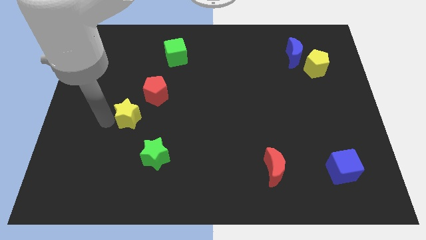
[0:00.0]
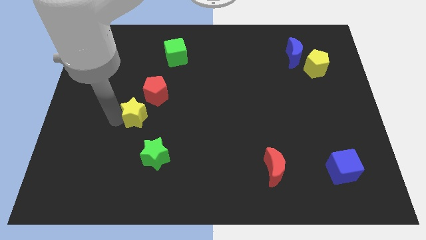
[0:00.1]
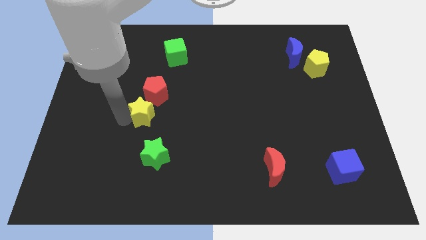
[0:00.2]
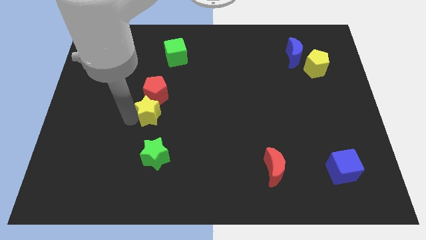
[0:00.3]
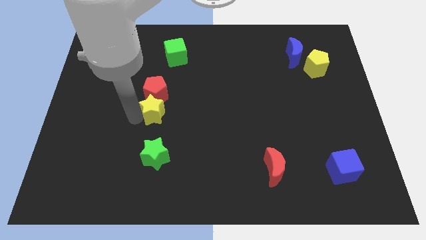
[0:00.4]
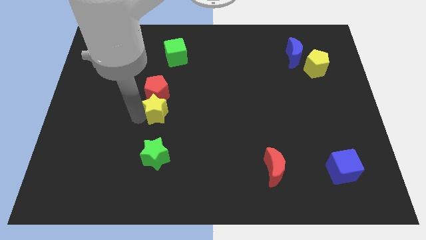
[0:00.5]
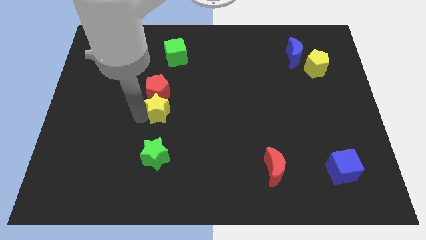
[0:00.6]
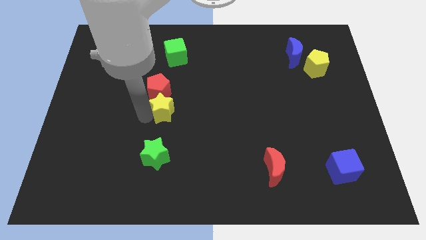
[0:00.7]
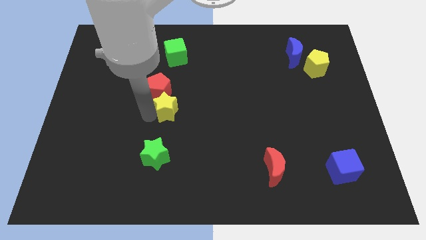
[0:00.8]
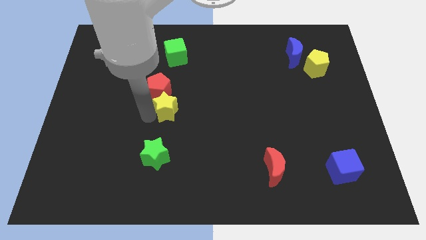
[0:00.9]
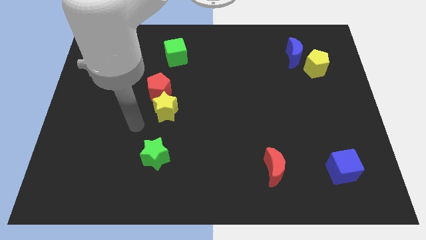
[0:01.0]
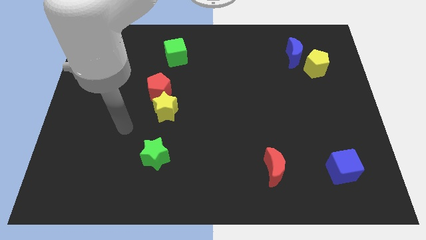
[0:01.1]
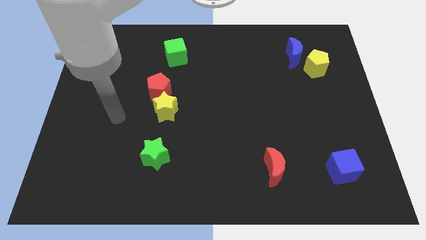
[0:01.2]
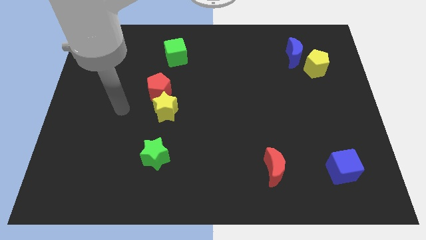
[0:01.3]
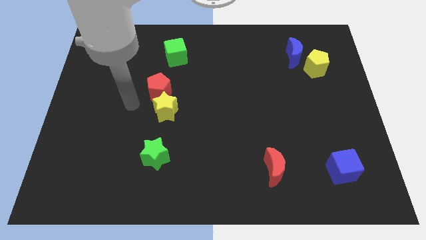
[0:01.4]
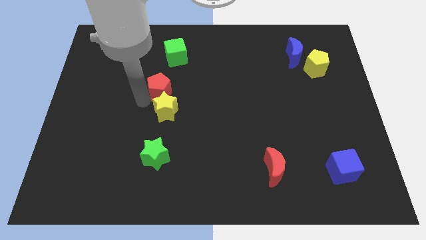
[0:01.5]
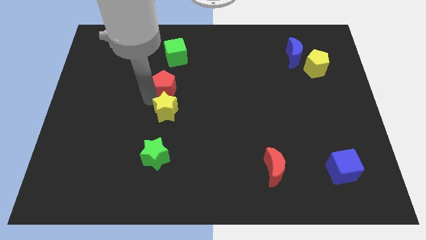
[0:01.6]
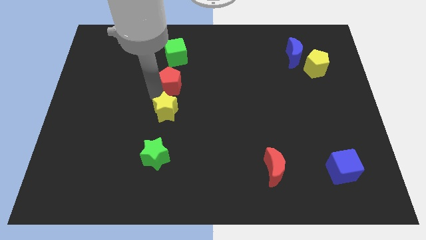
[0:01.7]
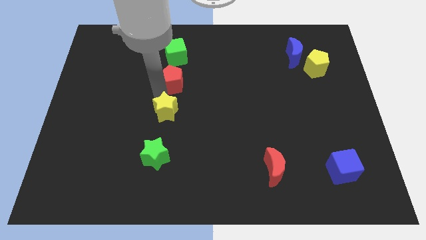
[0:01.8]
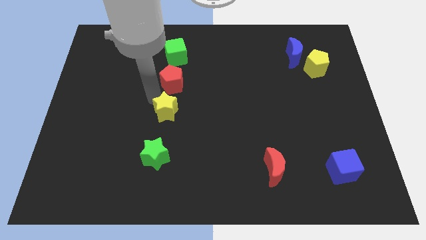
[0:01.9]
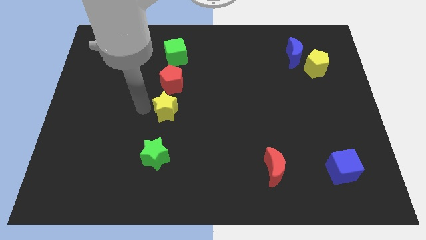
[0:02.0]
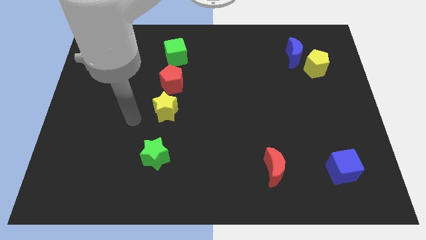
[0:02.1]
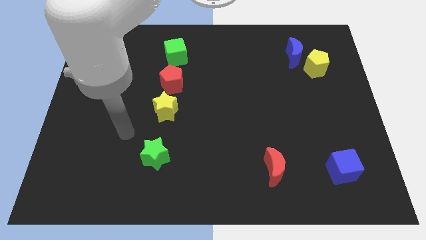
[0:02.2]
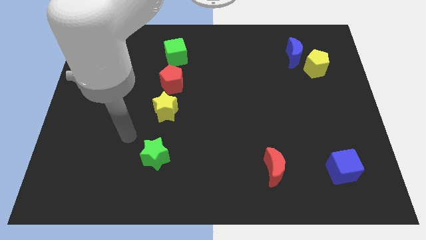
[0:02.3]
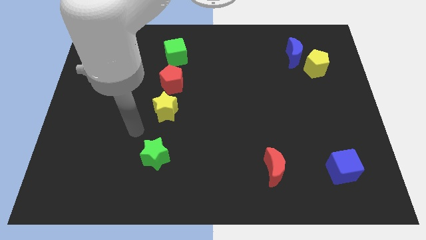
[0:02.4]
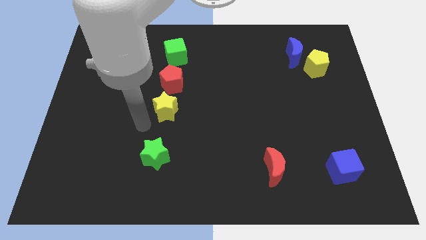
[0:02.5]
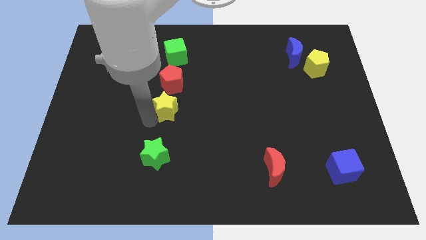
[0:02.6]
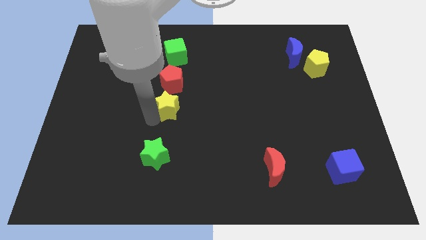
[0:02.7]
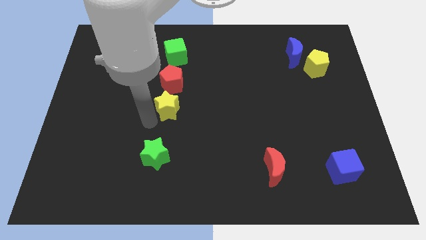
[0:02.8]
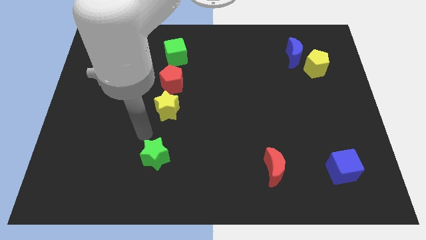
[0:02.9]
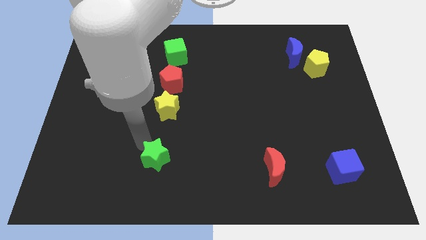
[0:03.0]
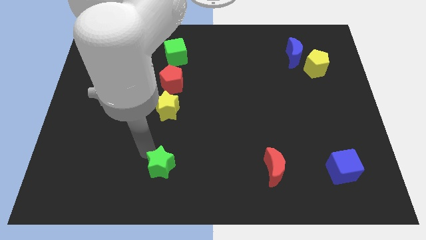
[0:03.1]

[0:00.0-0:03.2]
put the red pentagon and yellow star in a line vertically below the green cube

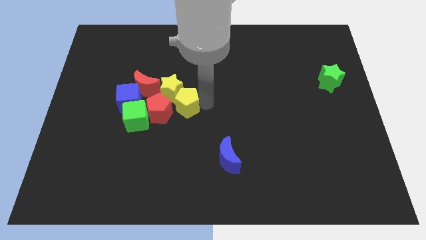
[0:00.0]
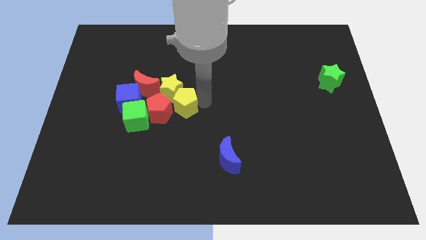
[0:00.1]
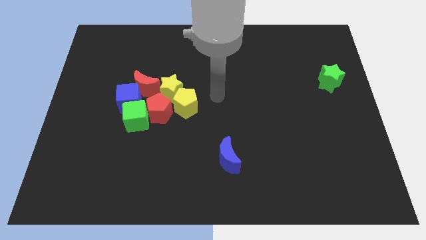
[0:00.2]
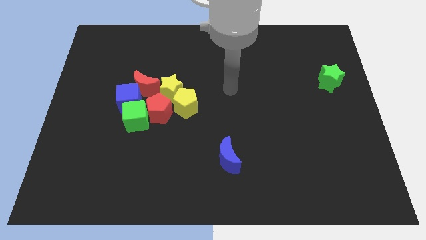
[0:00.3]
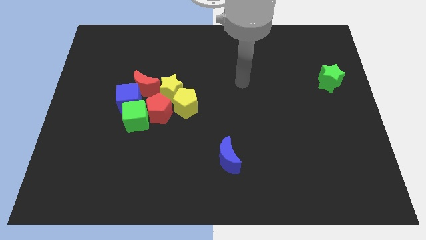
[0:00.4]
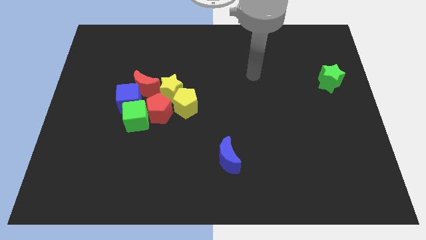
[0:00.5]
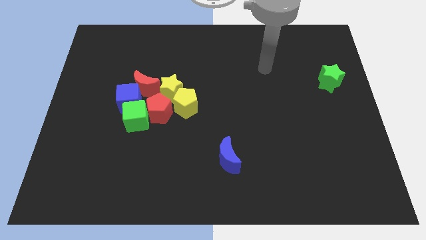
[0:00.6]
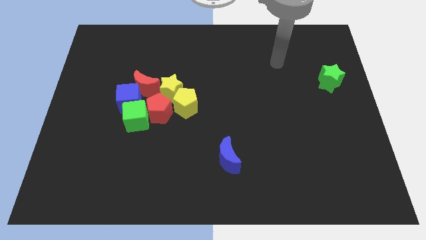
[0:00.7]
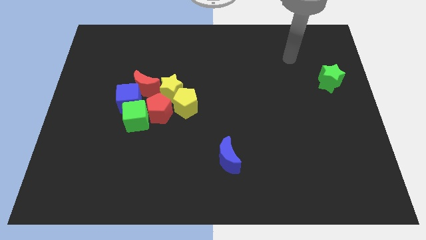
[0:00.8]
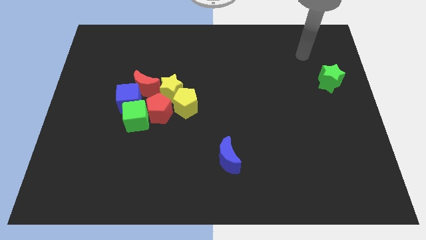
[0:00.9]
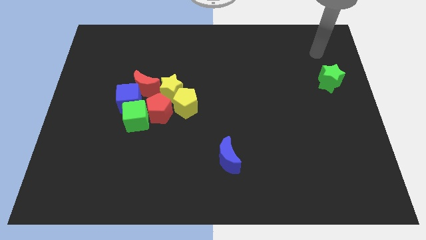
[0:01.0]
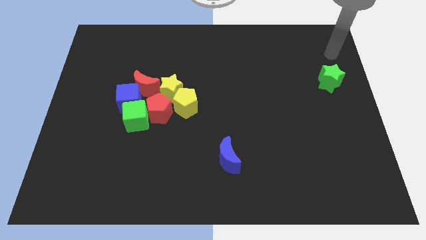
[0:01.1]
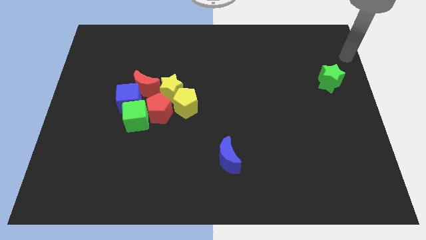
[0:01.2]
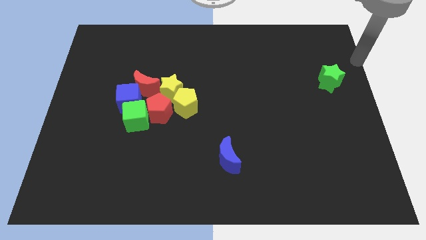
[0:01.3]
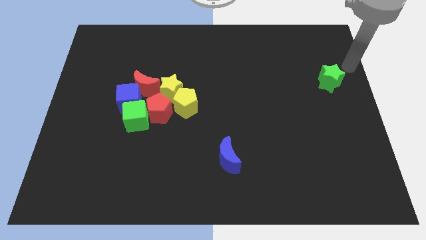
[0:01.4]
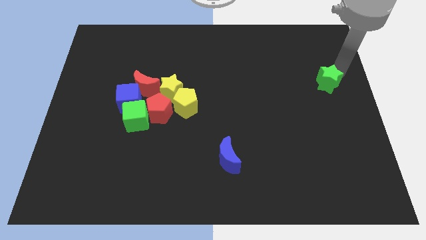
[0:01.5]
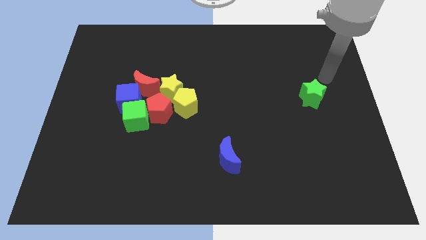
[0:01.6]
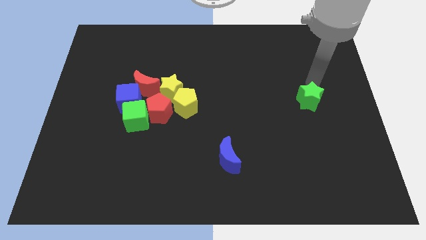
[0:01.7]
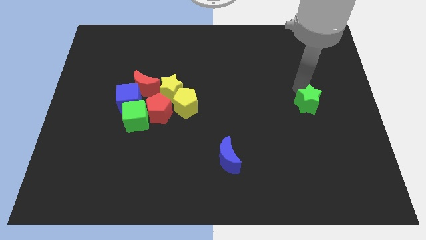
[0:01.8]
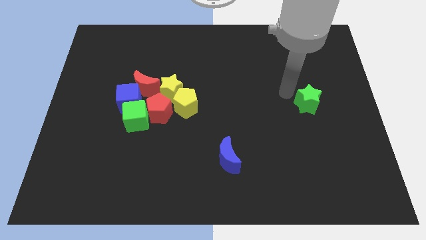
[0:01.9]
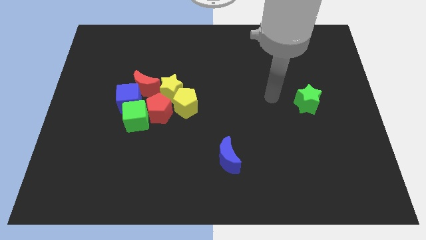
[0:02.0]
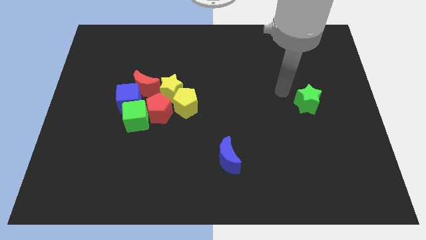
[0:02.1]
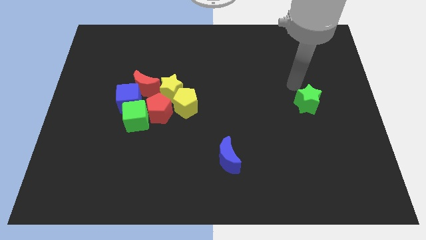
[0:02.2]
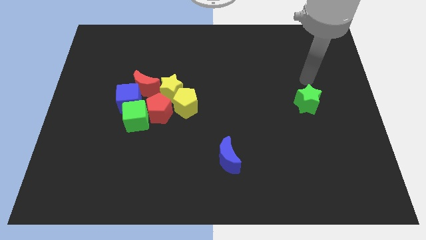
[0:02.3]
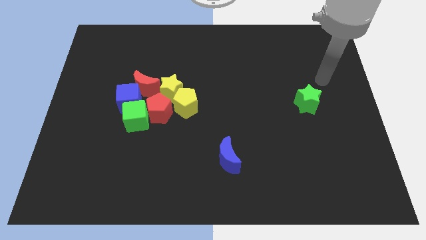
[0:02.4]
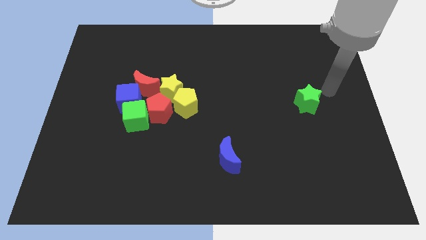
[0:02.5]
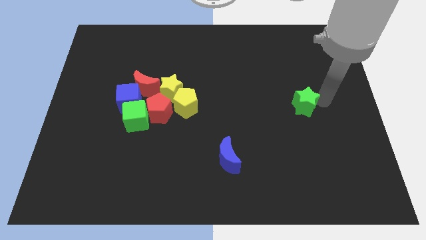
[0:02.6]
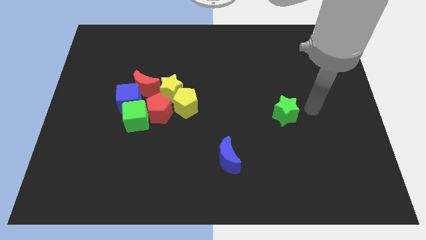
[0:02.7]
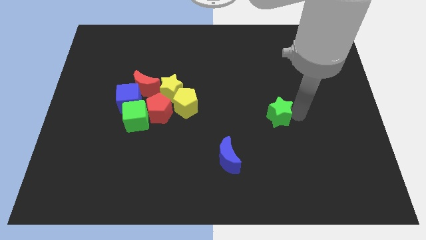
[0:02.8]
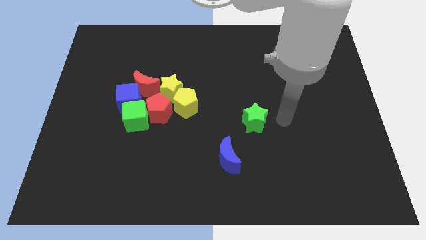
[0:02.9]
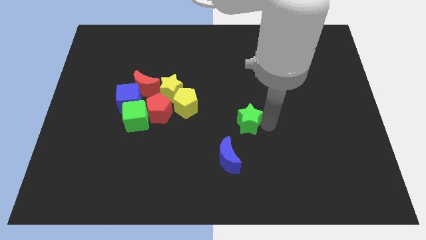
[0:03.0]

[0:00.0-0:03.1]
push the green star at the top right of the blue crescent

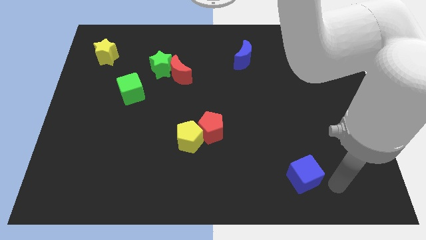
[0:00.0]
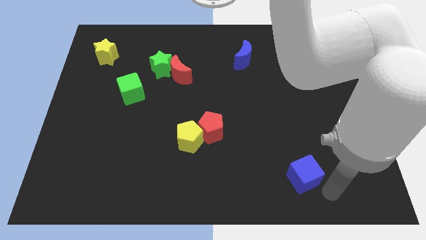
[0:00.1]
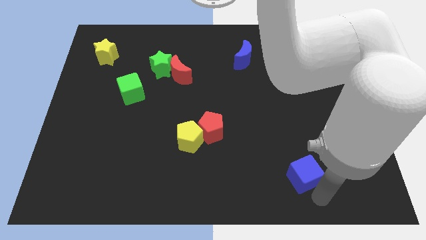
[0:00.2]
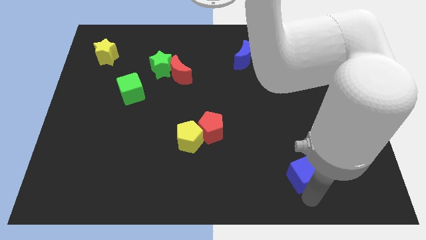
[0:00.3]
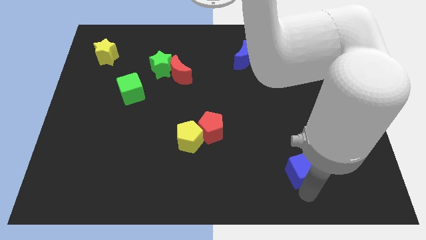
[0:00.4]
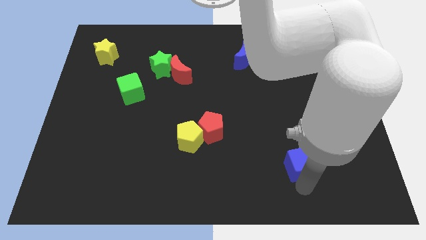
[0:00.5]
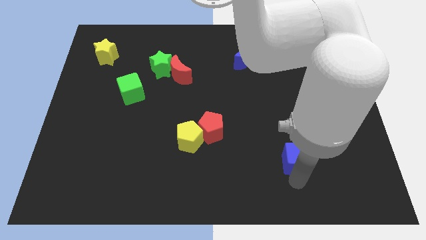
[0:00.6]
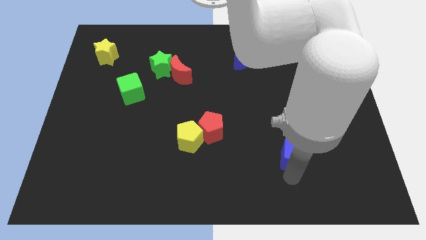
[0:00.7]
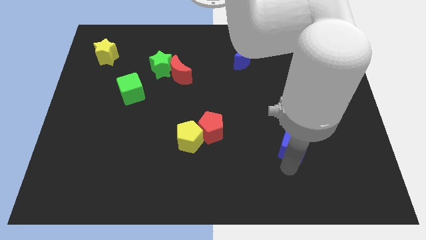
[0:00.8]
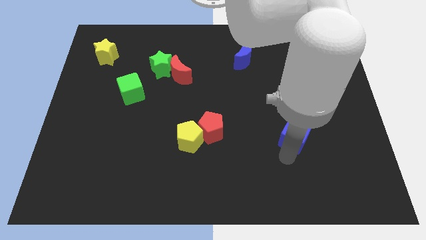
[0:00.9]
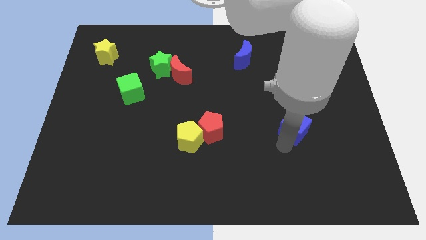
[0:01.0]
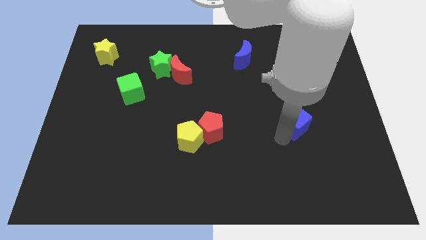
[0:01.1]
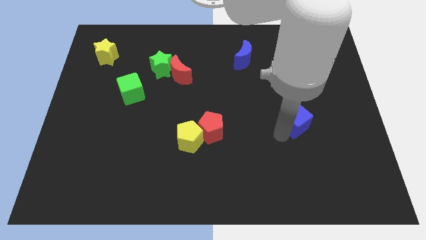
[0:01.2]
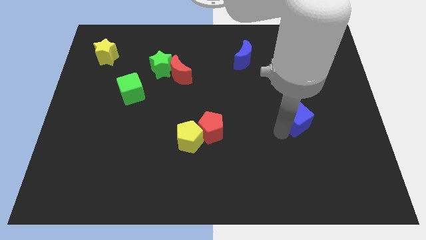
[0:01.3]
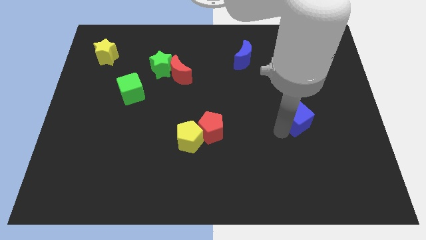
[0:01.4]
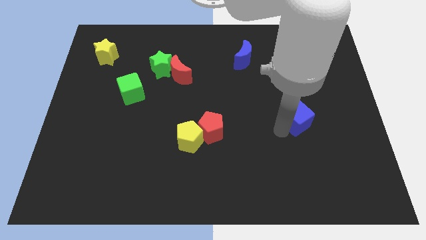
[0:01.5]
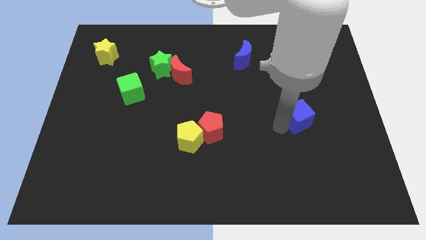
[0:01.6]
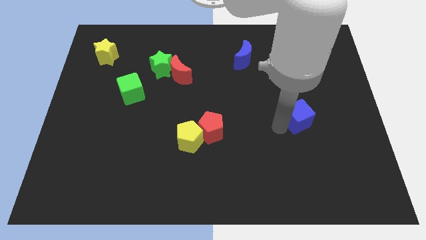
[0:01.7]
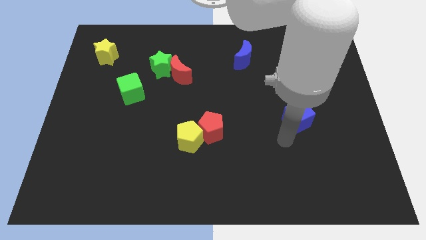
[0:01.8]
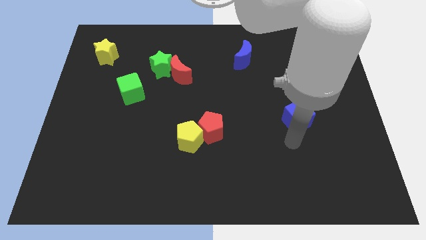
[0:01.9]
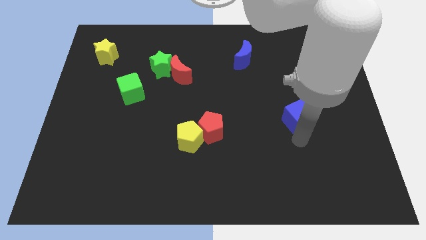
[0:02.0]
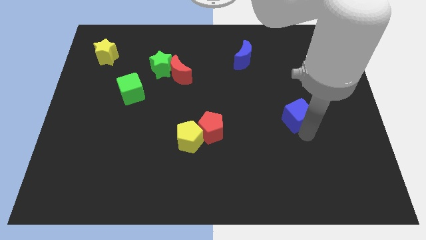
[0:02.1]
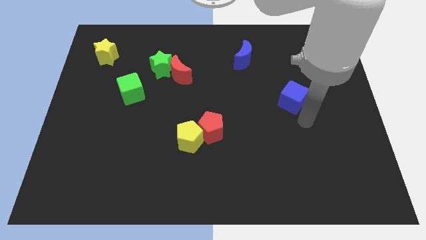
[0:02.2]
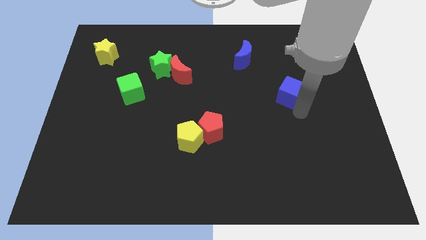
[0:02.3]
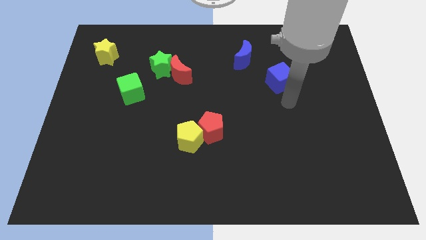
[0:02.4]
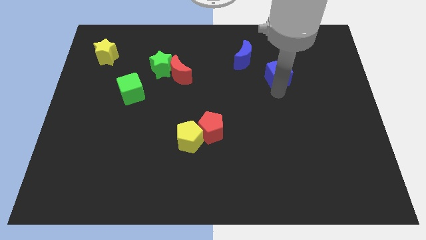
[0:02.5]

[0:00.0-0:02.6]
place the blue cube below the blue moon

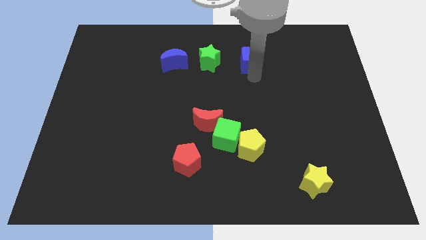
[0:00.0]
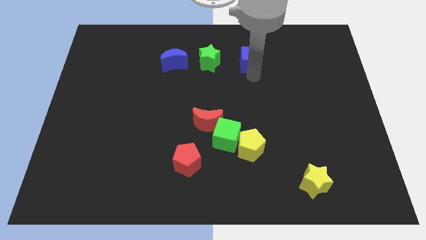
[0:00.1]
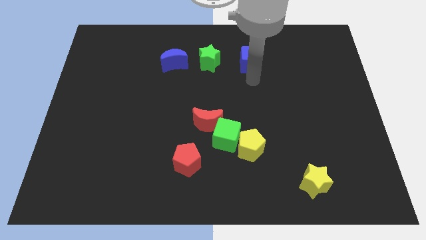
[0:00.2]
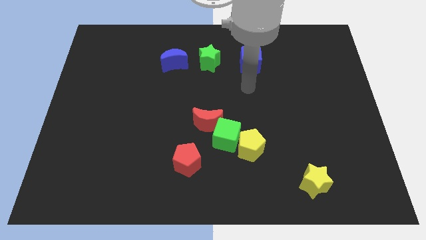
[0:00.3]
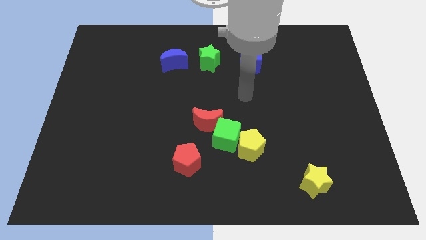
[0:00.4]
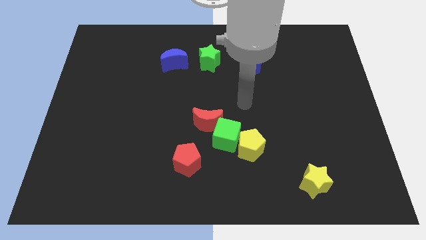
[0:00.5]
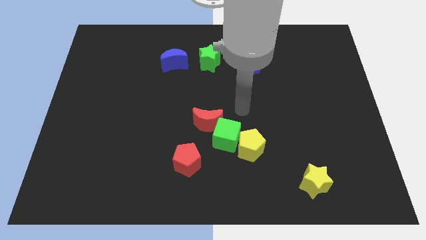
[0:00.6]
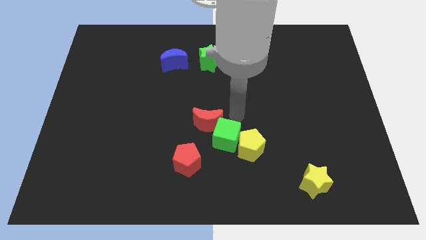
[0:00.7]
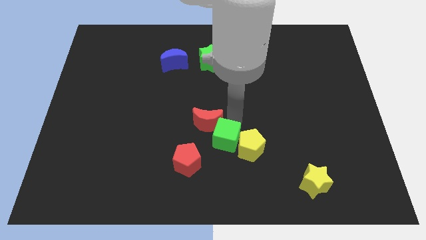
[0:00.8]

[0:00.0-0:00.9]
move the arm away from the blue cube
